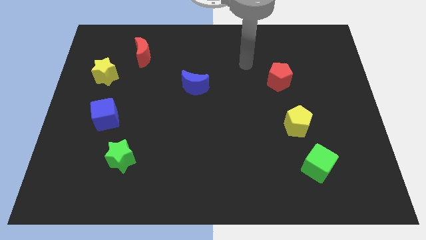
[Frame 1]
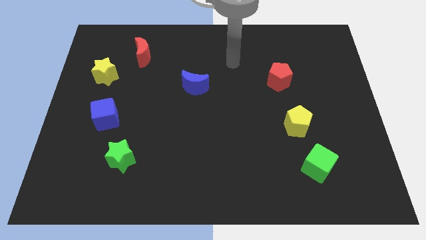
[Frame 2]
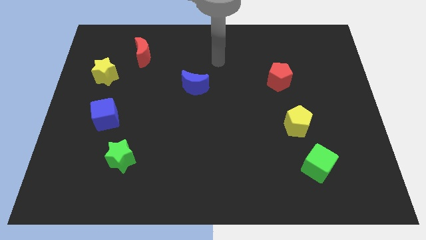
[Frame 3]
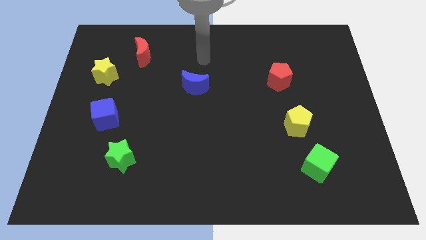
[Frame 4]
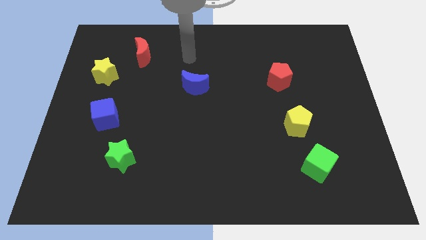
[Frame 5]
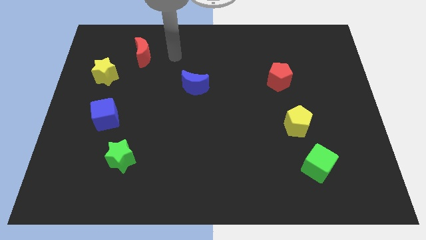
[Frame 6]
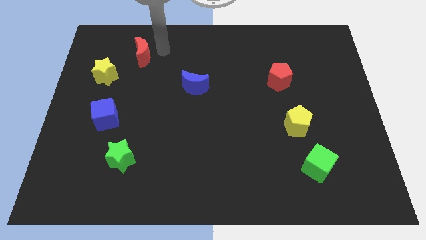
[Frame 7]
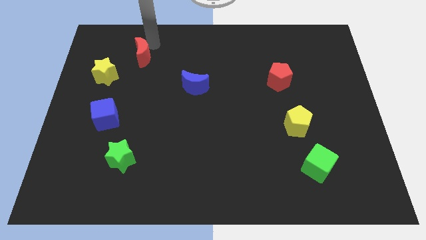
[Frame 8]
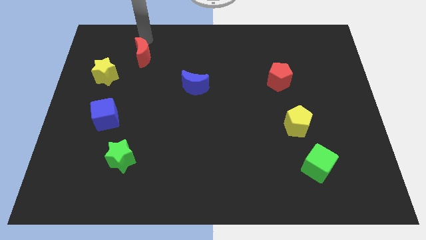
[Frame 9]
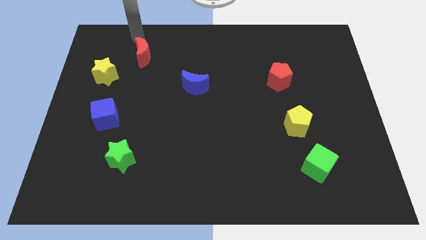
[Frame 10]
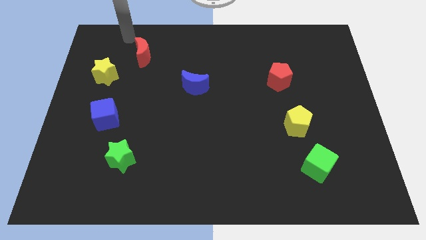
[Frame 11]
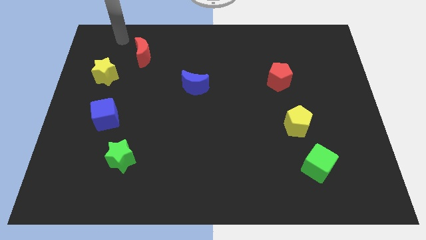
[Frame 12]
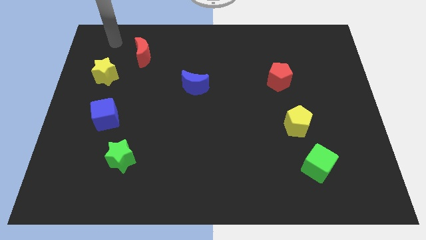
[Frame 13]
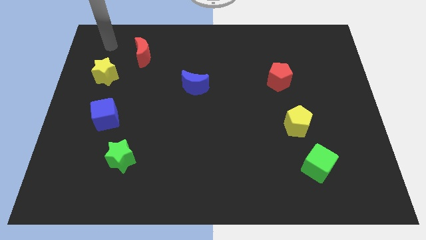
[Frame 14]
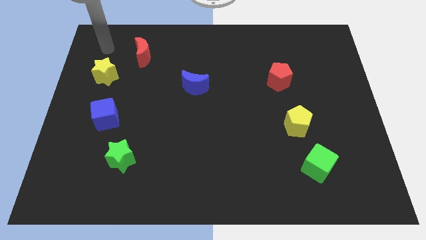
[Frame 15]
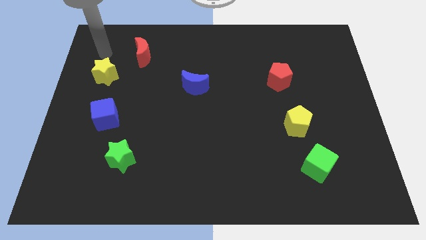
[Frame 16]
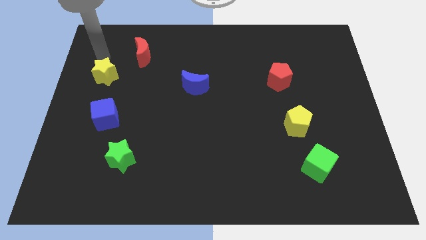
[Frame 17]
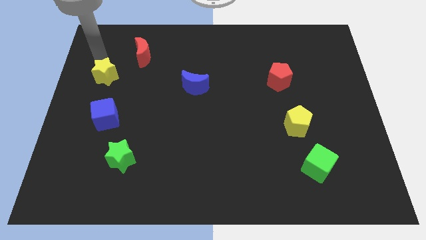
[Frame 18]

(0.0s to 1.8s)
place the arm above the yellow star

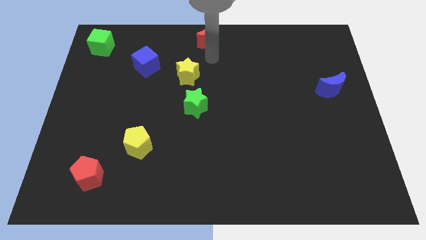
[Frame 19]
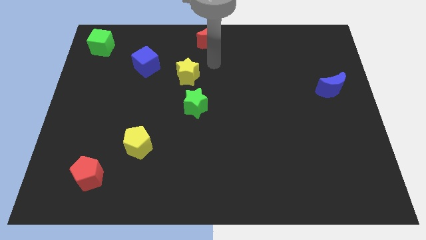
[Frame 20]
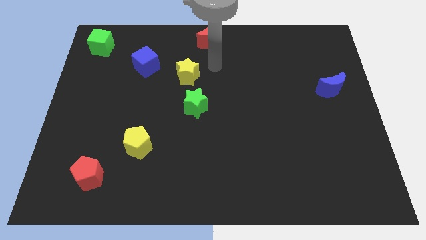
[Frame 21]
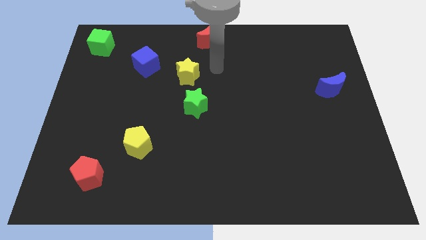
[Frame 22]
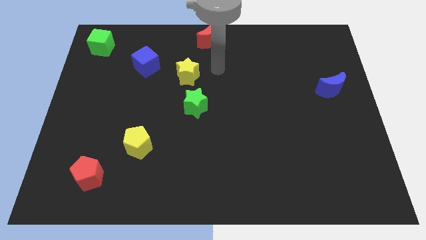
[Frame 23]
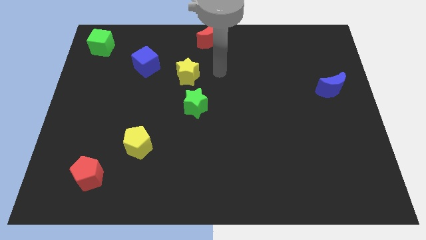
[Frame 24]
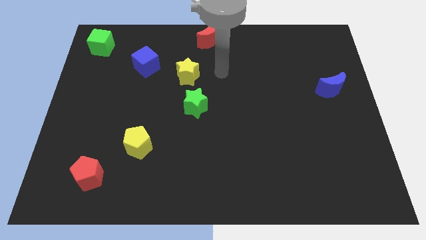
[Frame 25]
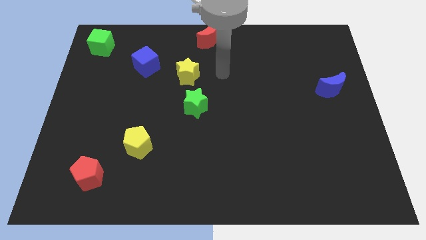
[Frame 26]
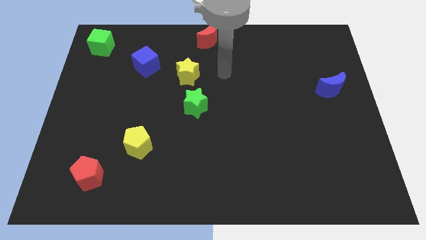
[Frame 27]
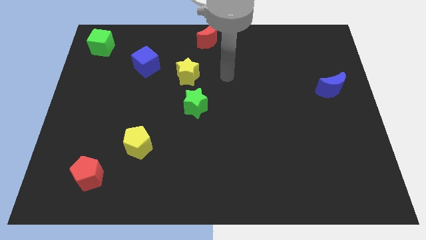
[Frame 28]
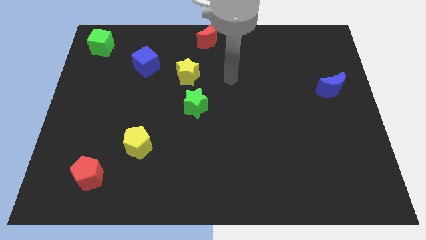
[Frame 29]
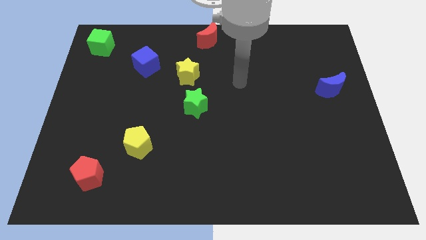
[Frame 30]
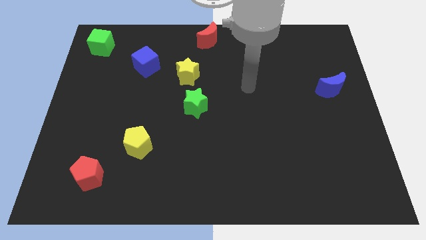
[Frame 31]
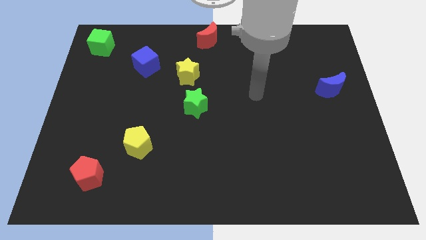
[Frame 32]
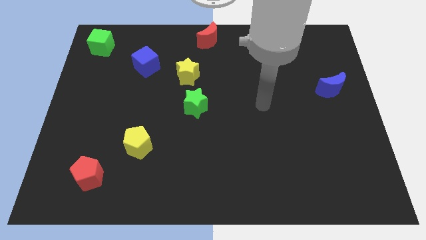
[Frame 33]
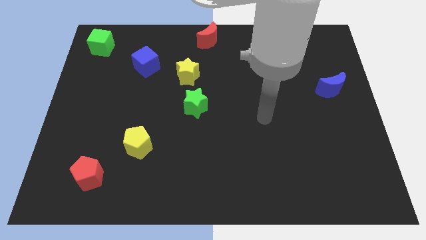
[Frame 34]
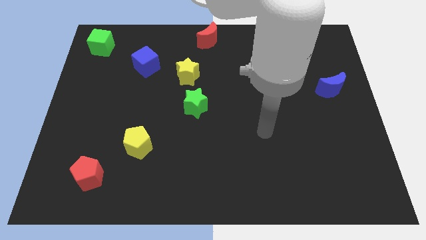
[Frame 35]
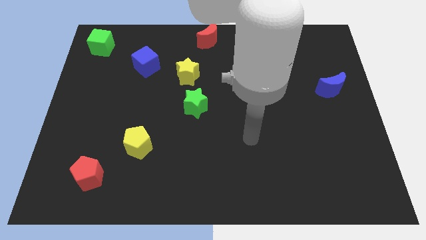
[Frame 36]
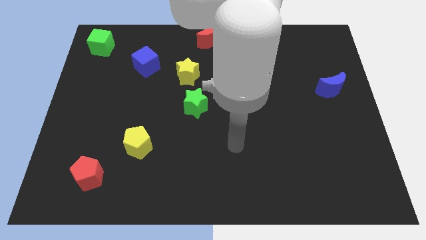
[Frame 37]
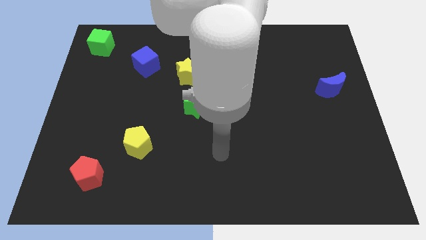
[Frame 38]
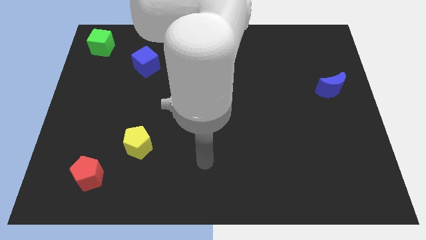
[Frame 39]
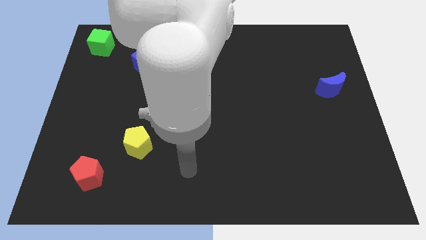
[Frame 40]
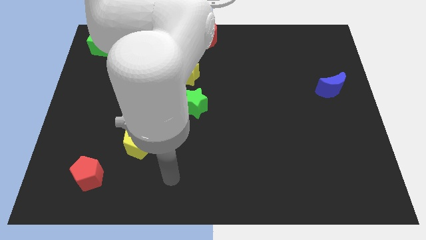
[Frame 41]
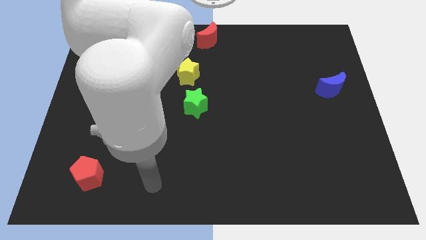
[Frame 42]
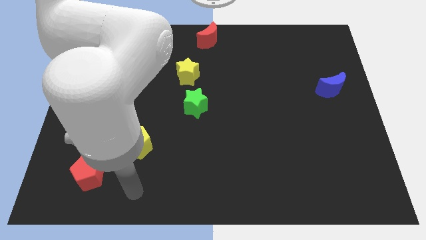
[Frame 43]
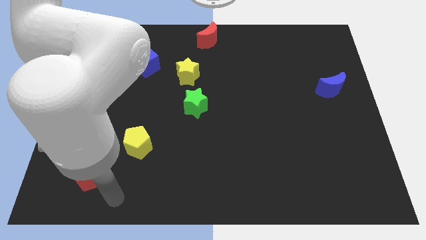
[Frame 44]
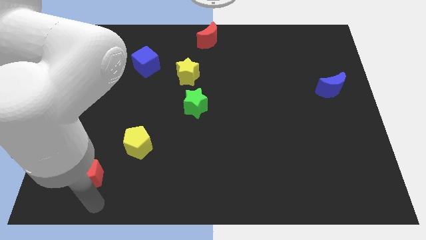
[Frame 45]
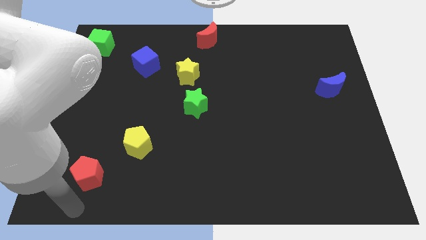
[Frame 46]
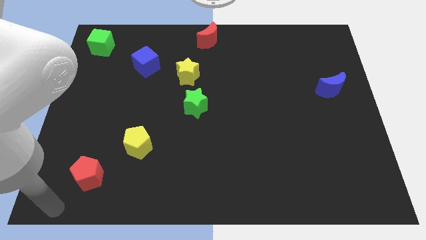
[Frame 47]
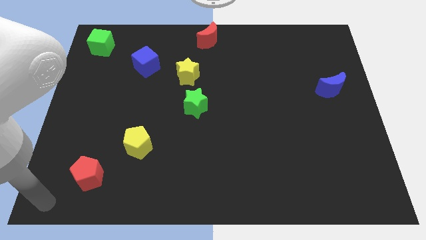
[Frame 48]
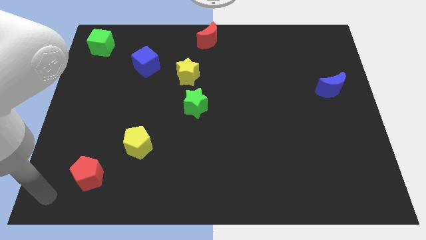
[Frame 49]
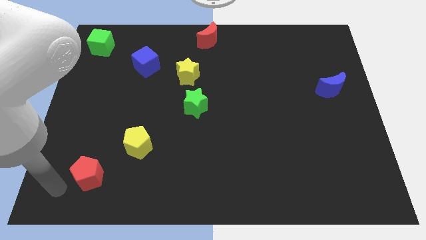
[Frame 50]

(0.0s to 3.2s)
move the arm away from the red moon

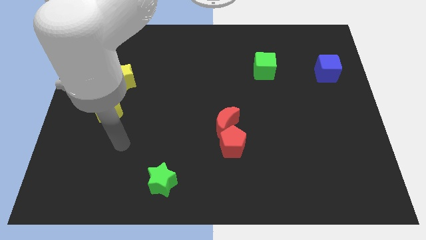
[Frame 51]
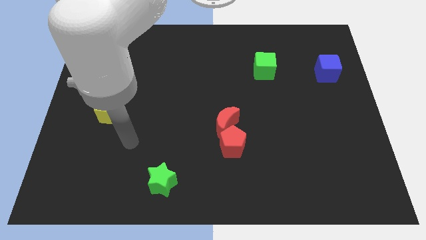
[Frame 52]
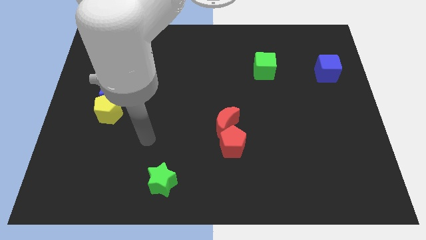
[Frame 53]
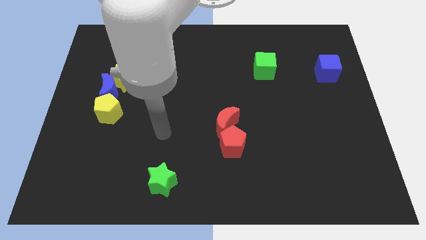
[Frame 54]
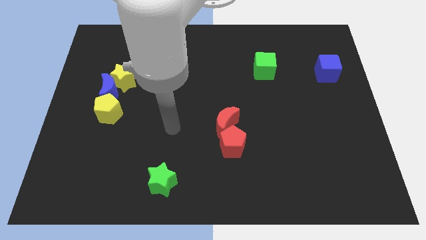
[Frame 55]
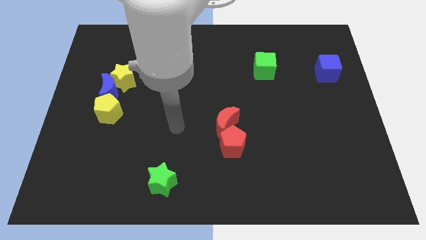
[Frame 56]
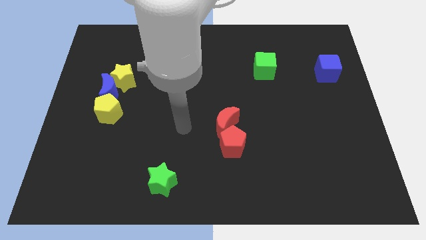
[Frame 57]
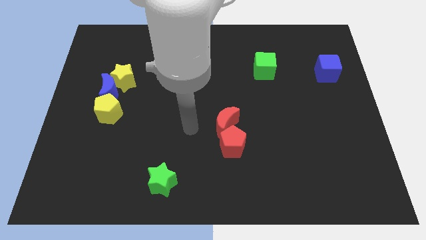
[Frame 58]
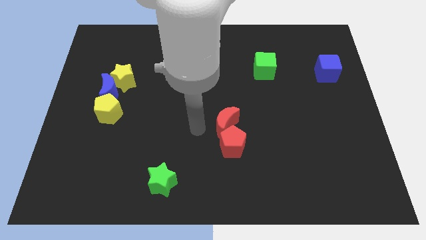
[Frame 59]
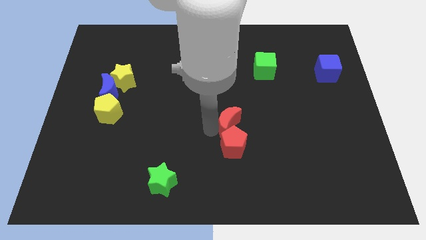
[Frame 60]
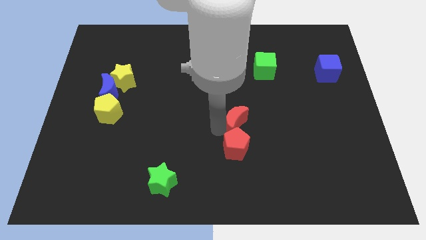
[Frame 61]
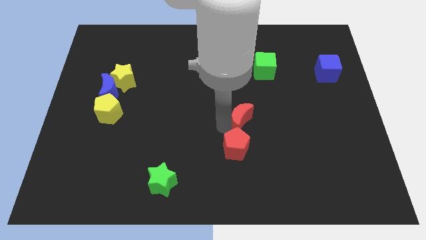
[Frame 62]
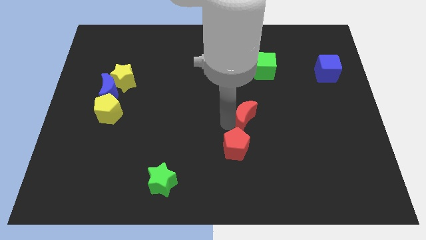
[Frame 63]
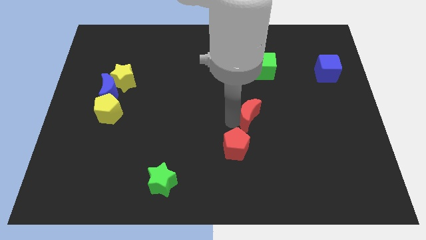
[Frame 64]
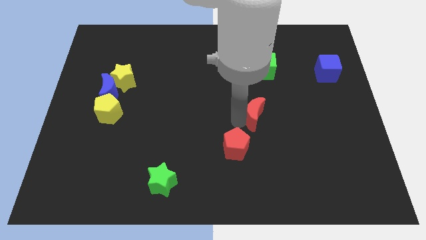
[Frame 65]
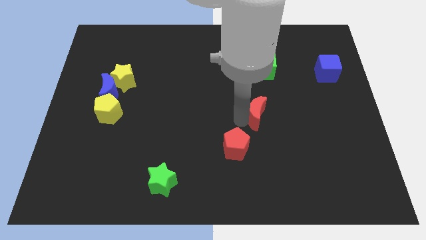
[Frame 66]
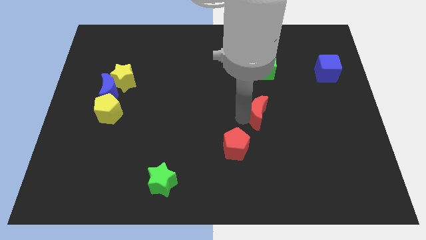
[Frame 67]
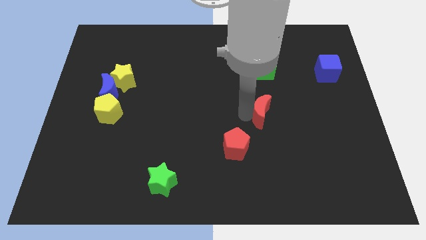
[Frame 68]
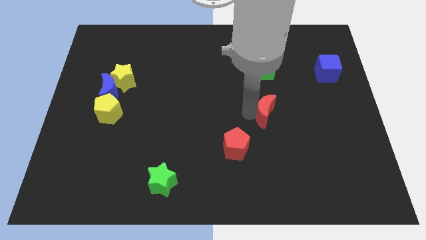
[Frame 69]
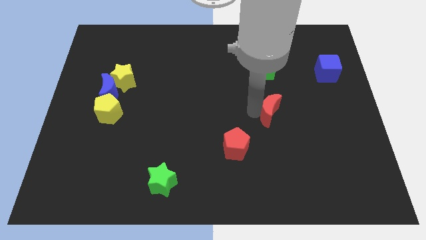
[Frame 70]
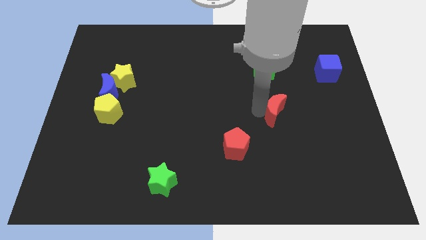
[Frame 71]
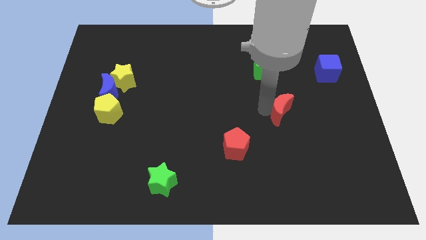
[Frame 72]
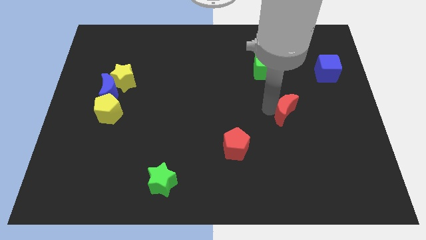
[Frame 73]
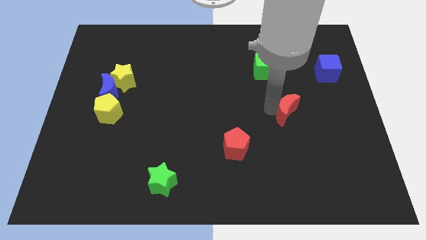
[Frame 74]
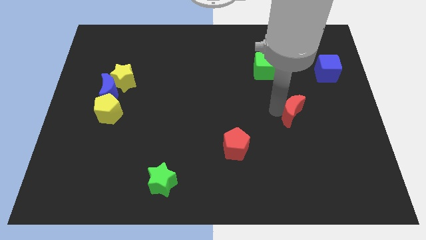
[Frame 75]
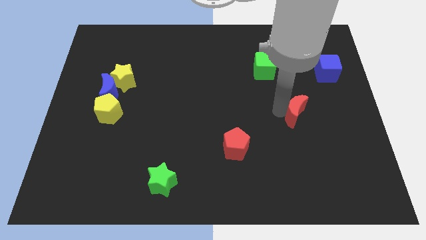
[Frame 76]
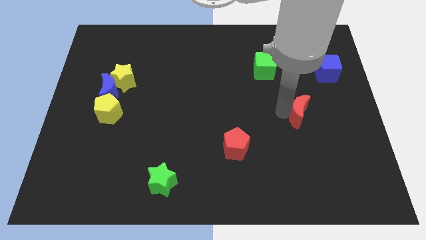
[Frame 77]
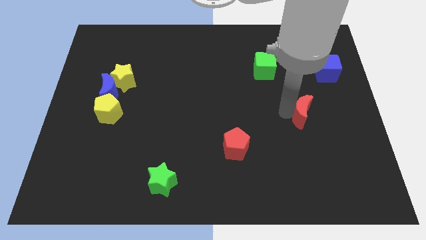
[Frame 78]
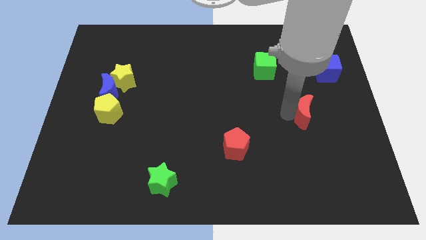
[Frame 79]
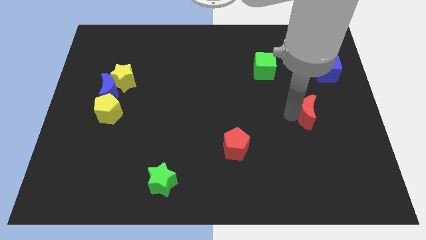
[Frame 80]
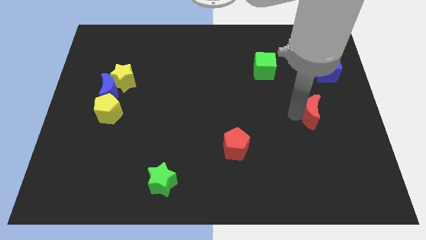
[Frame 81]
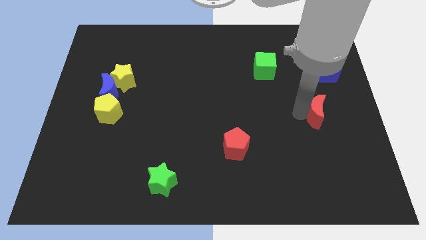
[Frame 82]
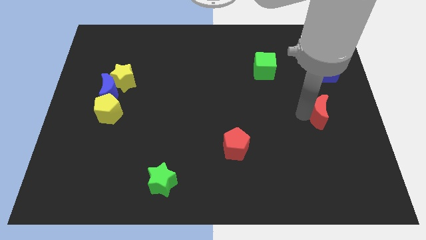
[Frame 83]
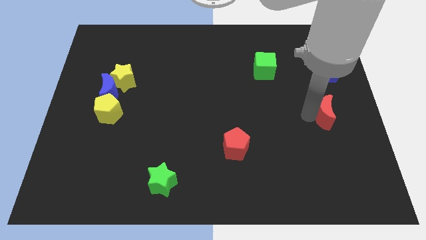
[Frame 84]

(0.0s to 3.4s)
place red moon to the bottom of blue cube

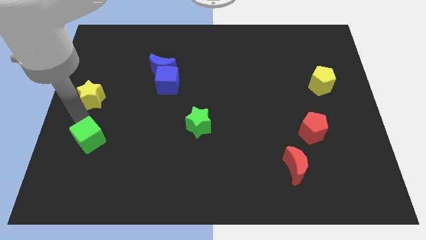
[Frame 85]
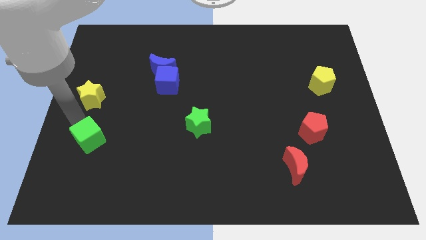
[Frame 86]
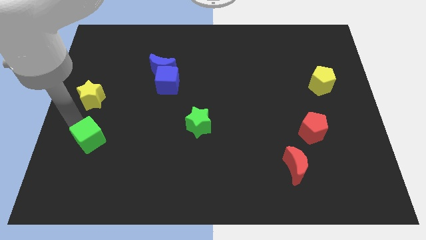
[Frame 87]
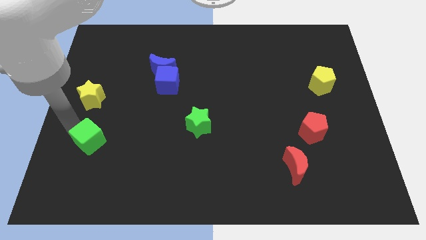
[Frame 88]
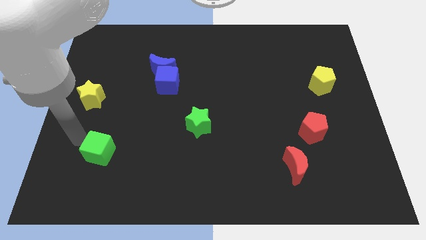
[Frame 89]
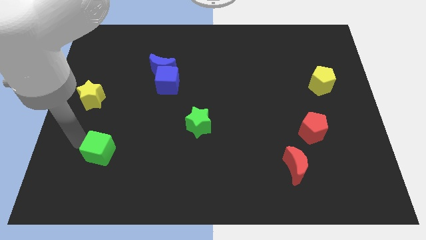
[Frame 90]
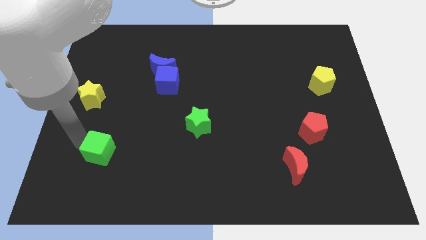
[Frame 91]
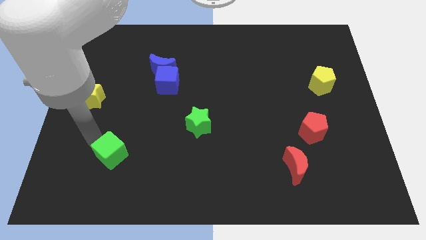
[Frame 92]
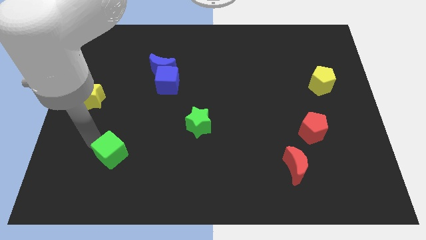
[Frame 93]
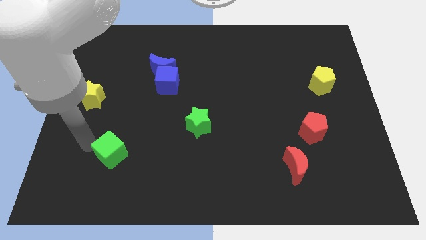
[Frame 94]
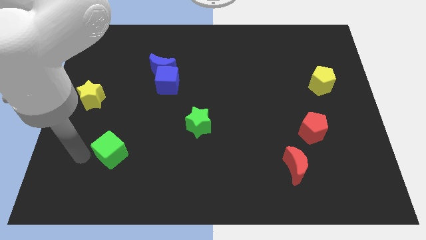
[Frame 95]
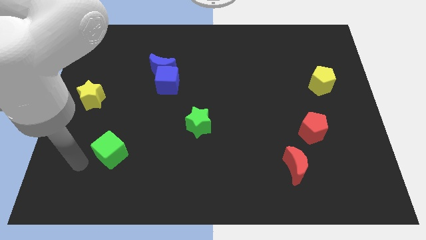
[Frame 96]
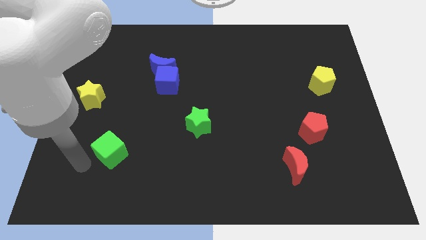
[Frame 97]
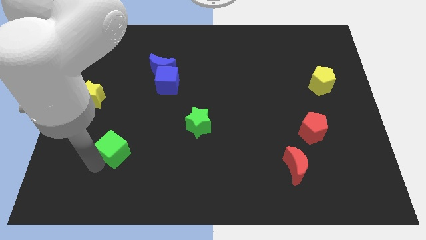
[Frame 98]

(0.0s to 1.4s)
place the green cube slightly downwards
